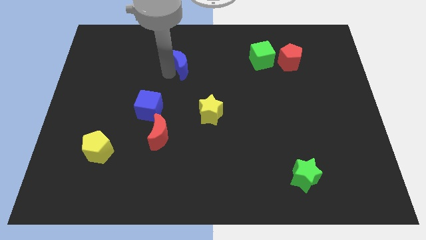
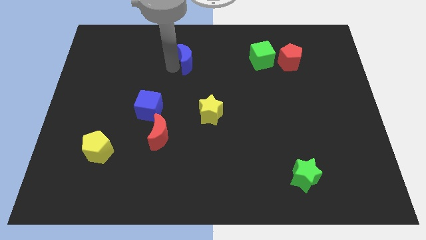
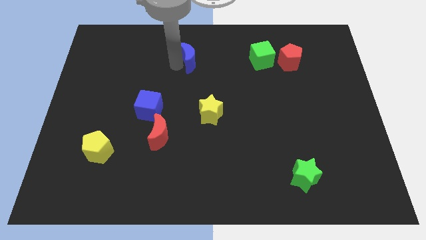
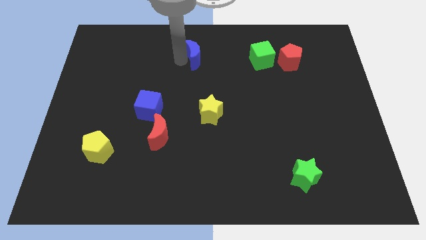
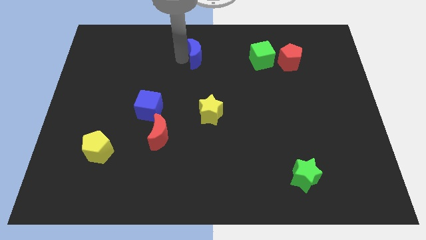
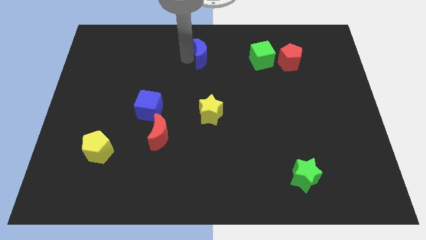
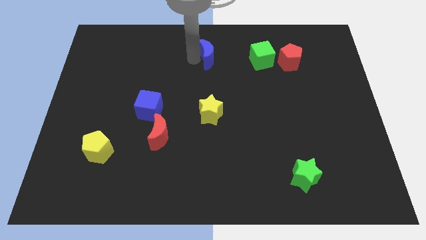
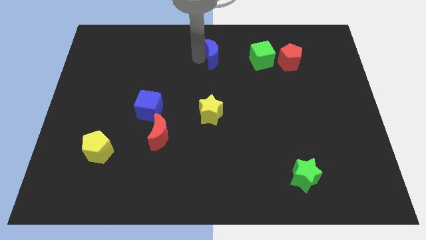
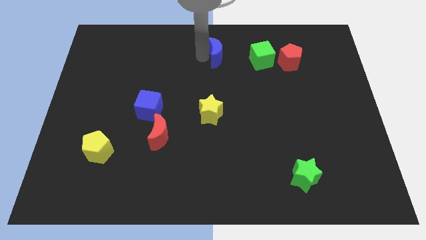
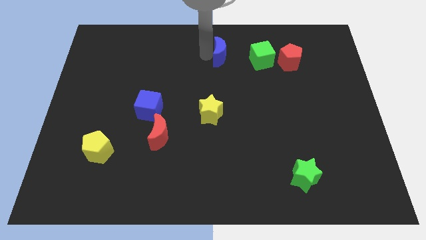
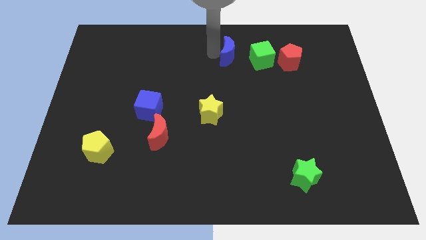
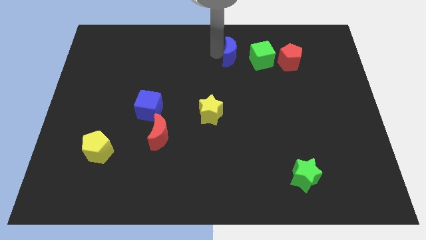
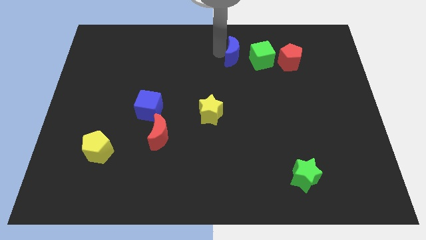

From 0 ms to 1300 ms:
move blue crescent towards green cube

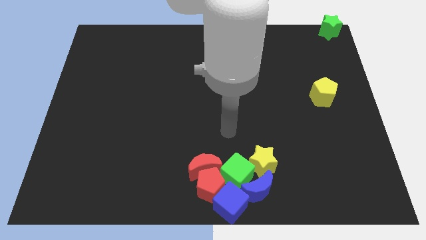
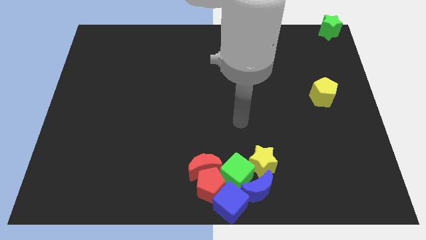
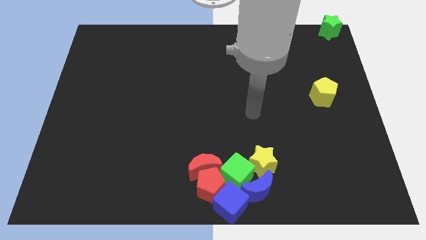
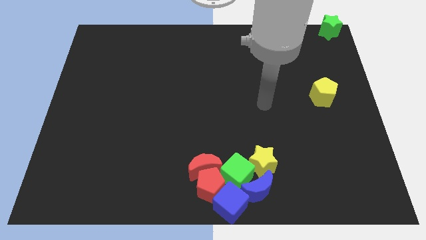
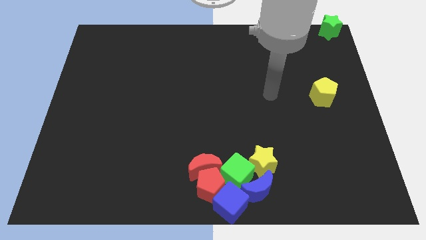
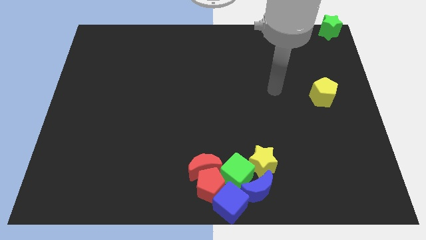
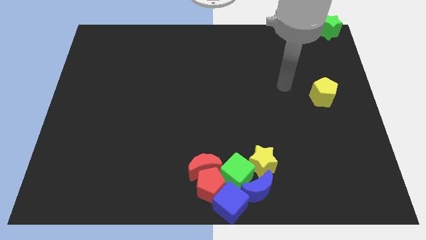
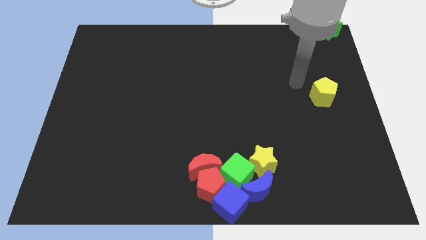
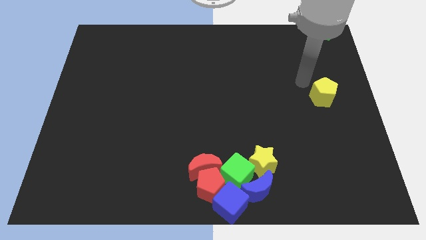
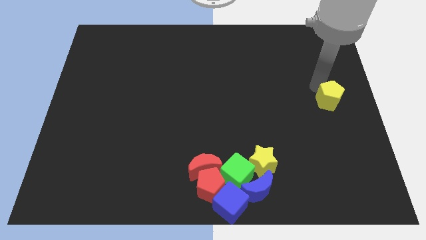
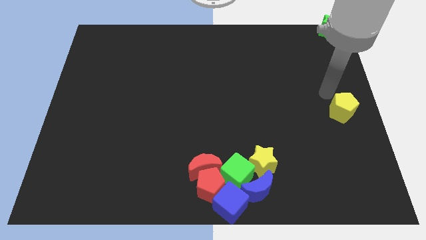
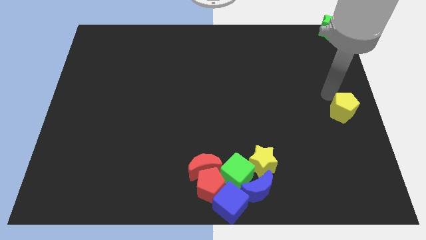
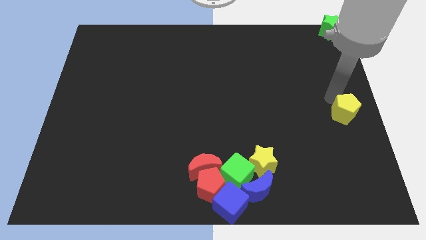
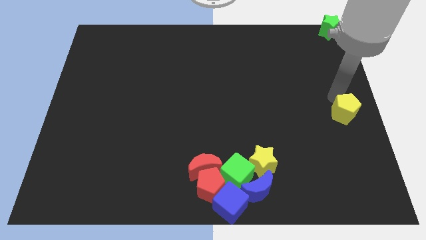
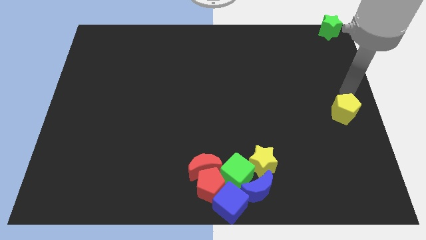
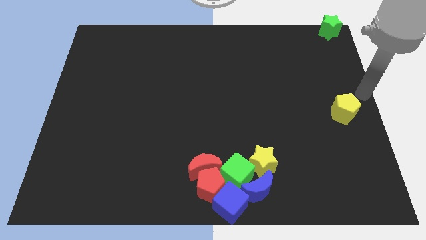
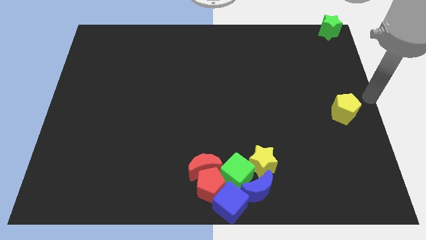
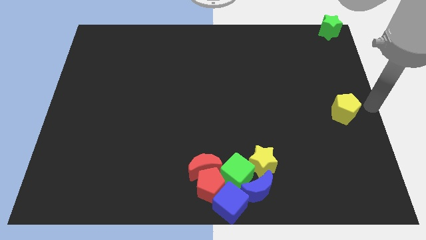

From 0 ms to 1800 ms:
move the yellow pentagon towards the right center of the board

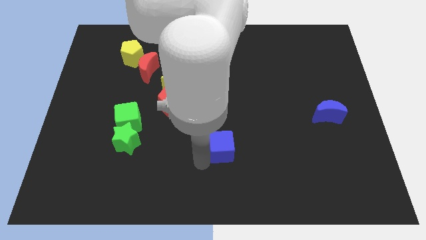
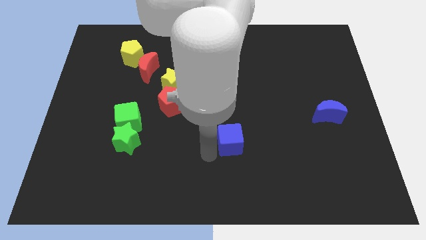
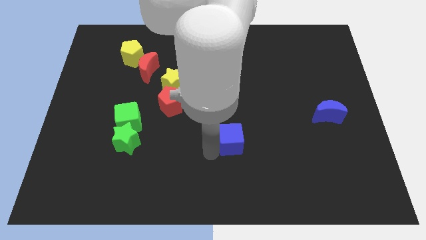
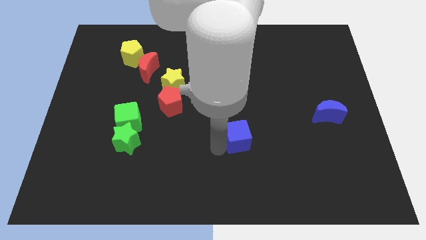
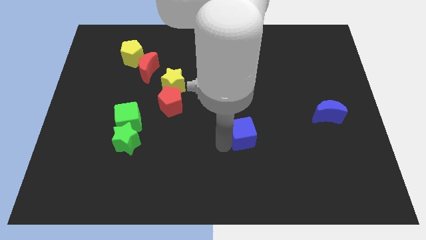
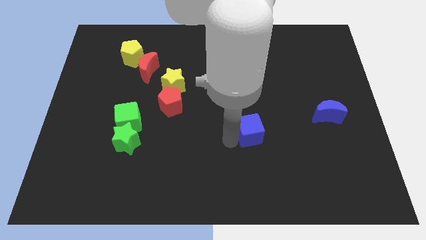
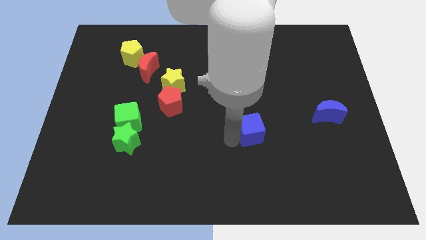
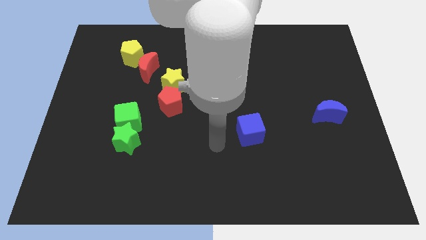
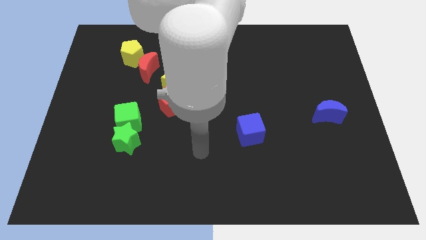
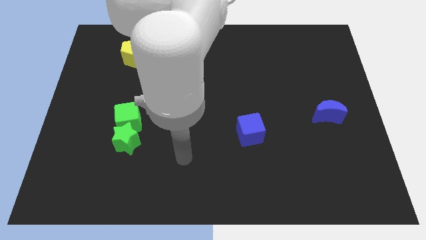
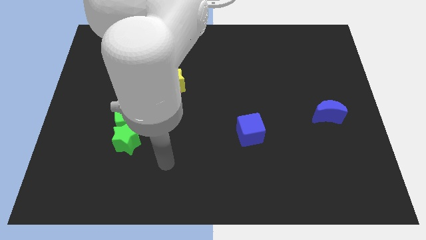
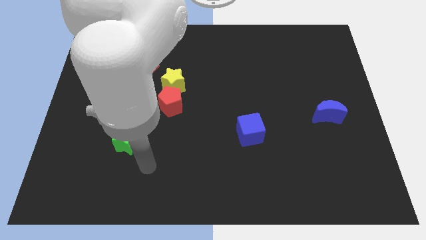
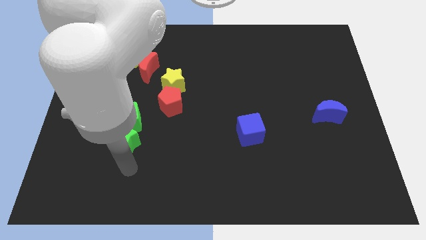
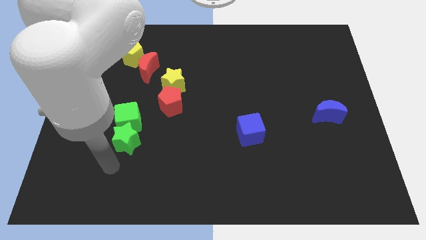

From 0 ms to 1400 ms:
push the blue cube to the right center of the board

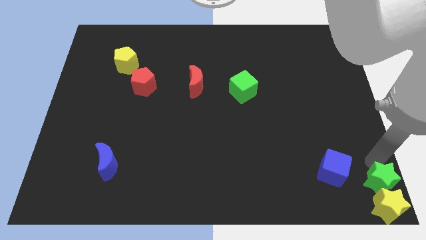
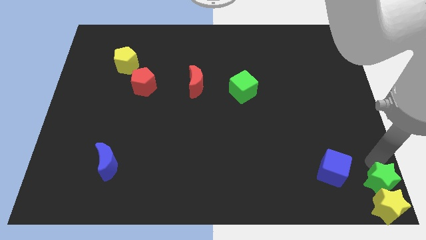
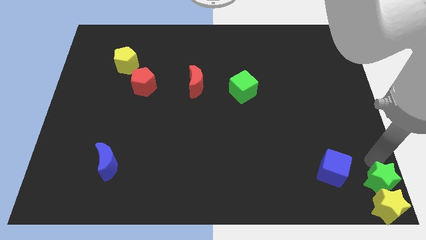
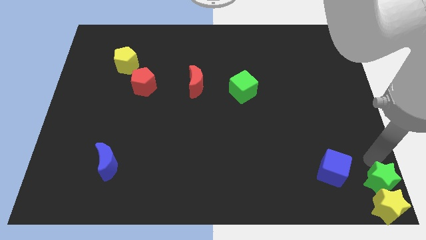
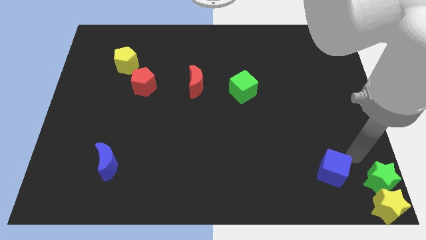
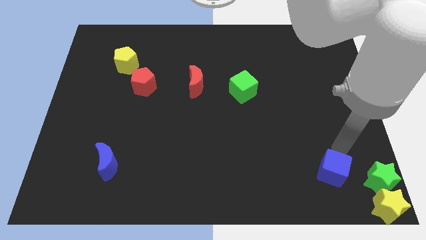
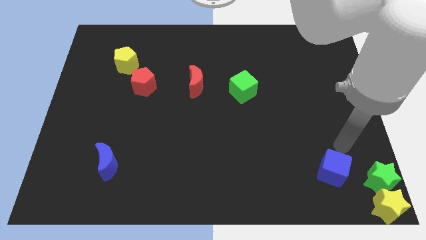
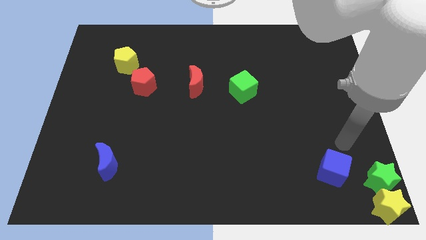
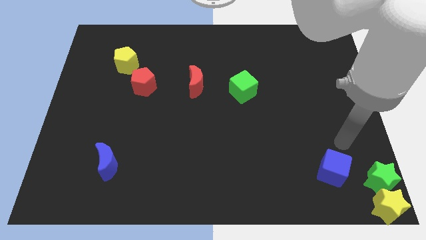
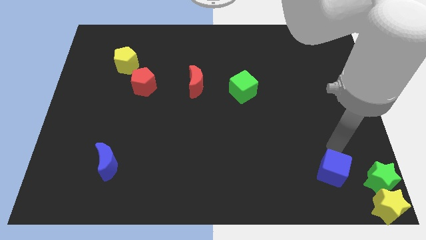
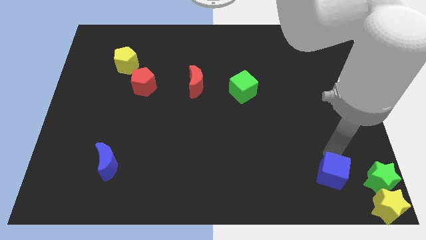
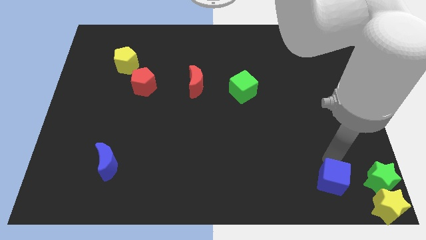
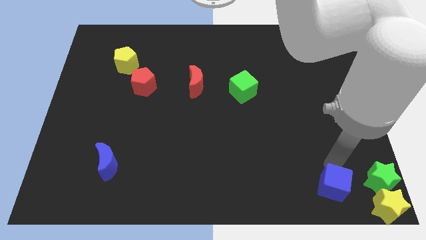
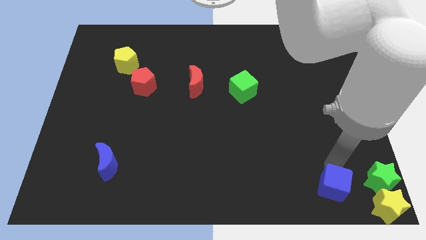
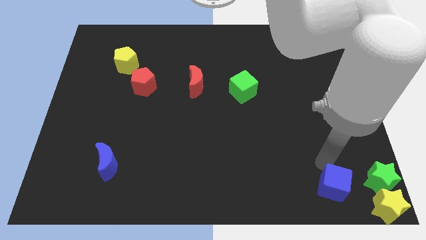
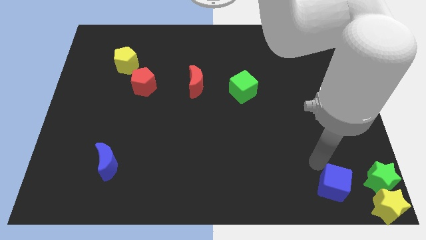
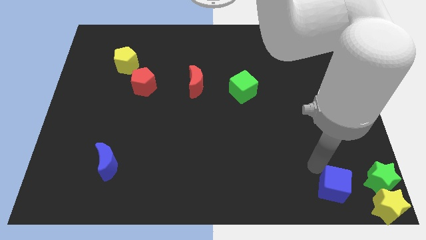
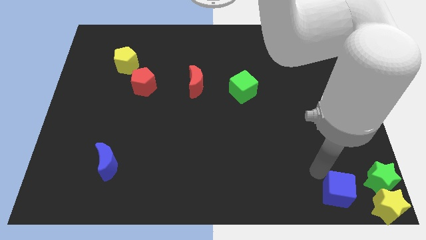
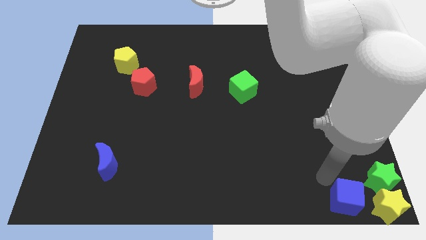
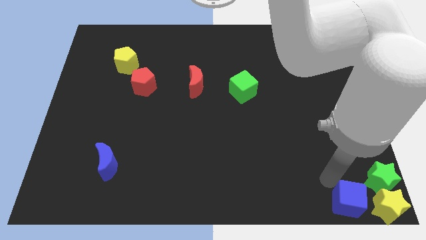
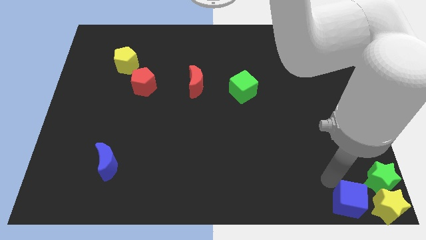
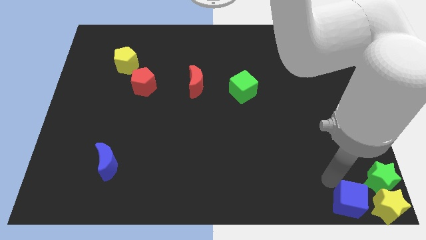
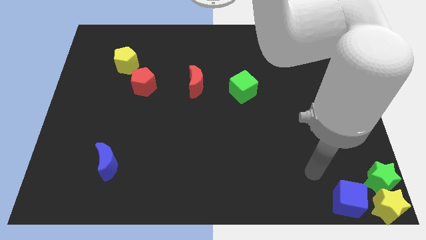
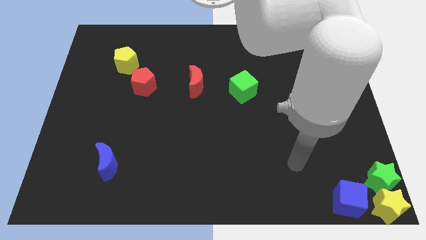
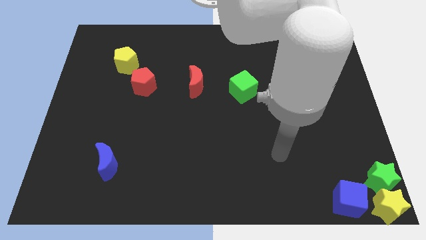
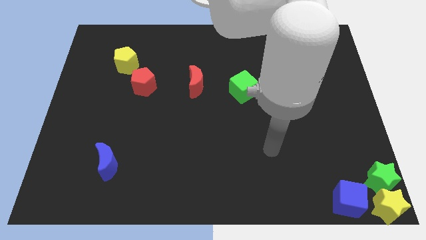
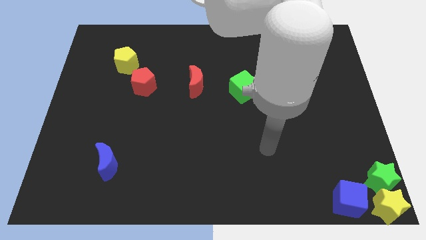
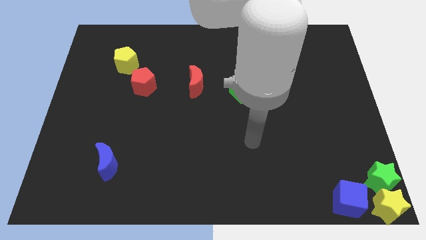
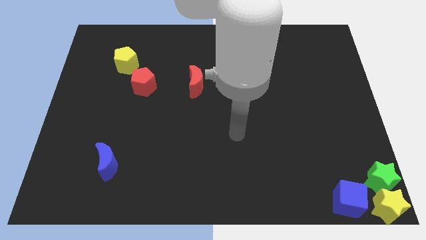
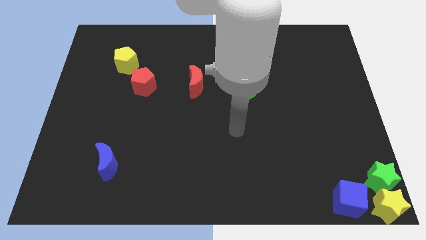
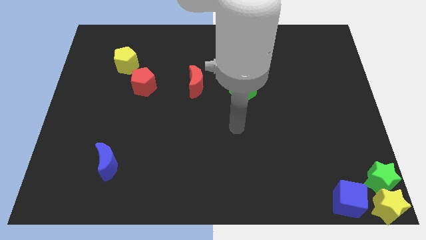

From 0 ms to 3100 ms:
push the blue cube into the yellow star

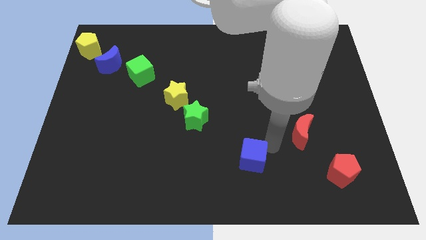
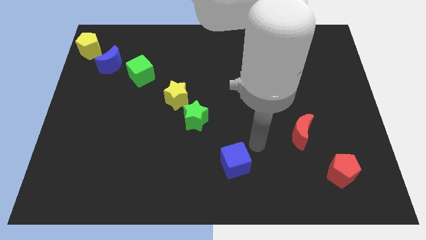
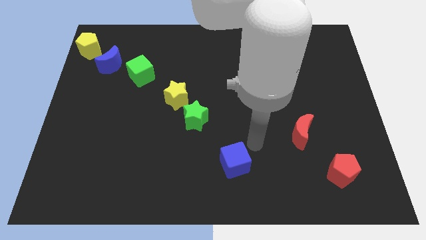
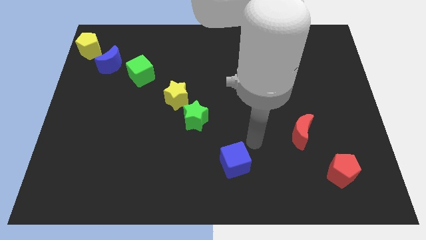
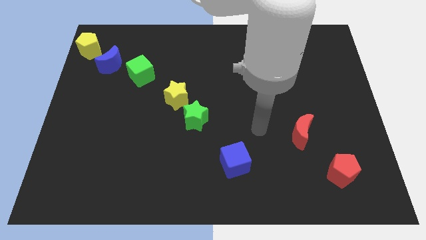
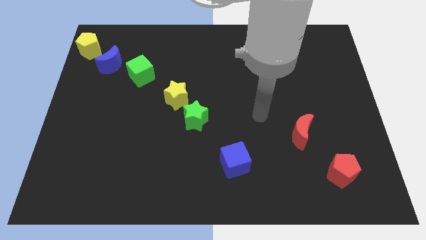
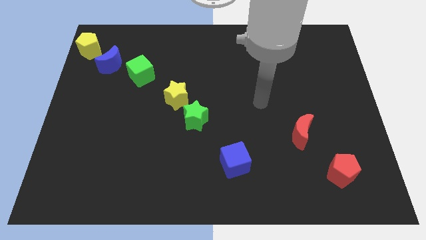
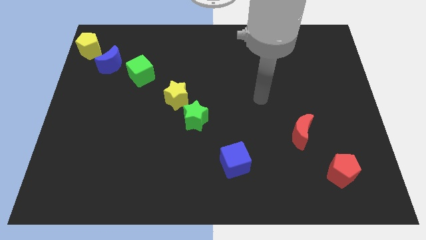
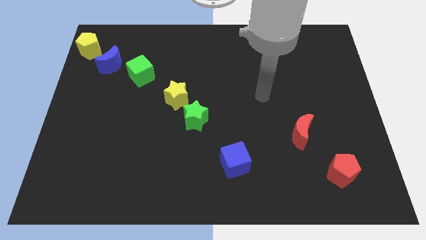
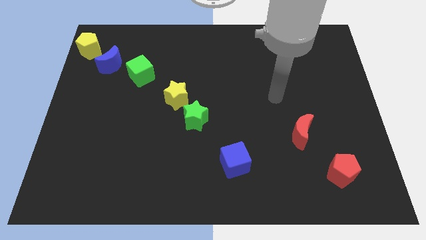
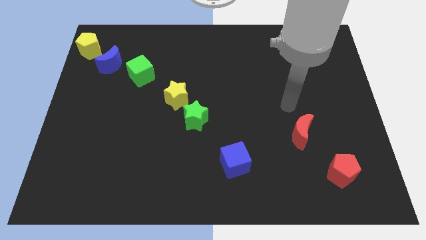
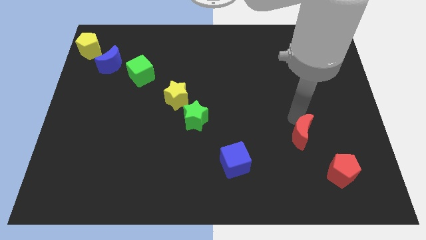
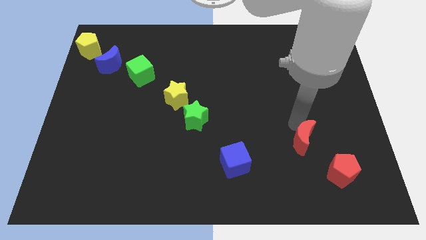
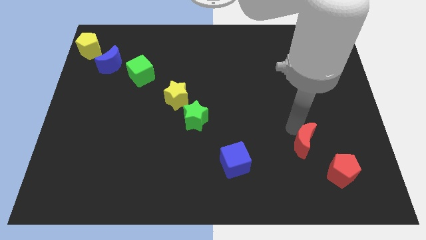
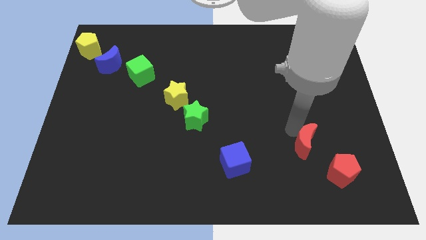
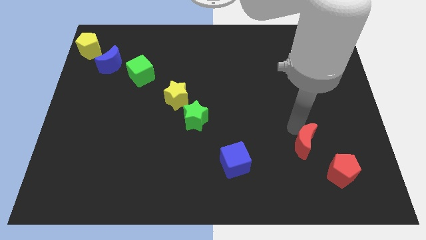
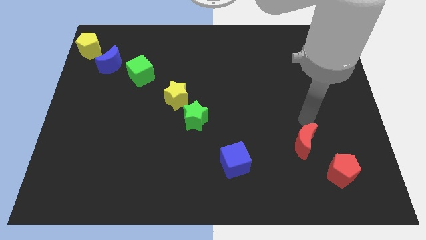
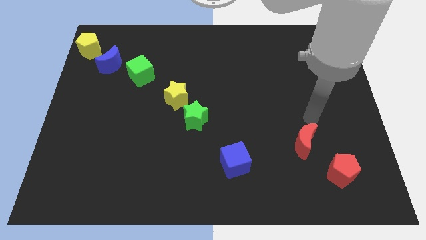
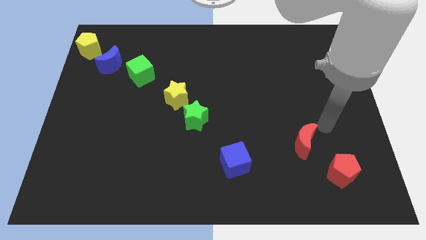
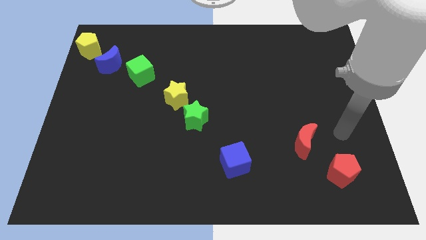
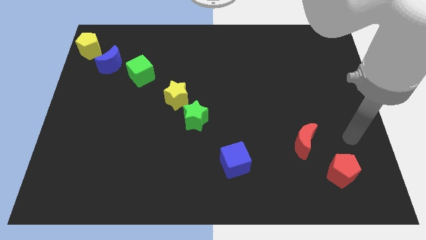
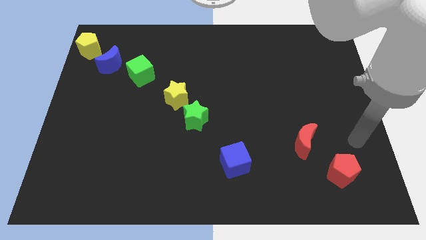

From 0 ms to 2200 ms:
move the red moon slightly
